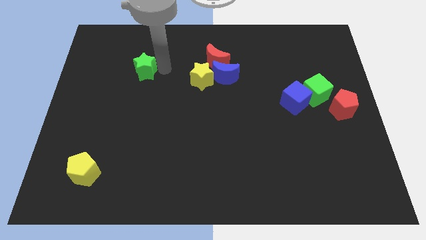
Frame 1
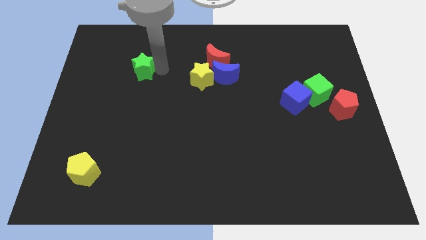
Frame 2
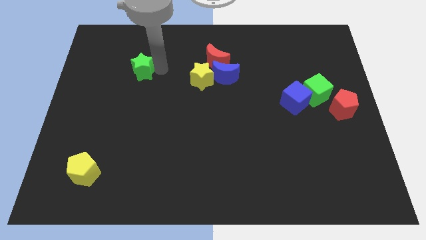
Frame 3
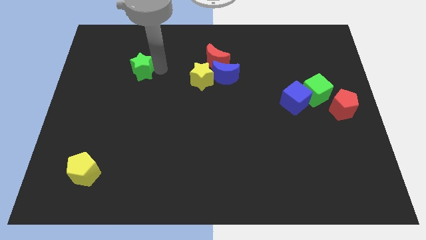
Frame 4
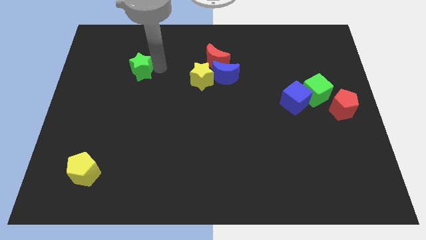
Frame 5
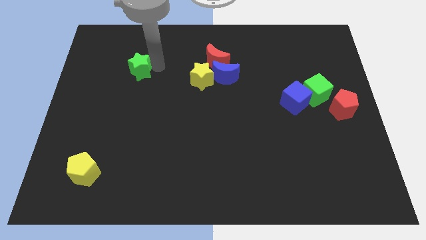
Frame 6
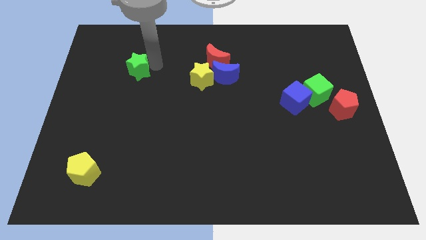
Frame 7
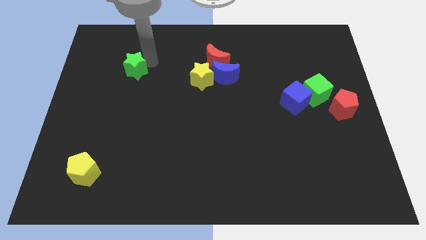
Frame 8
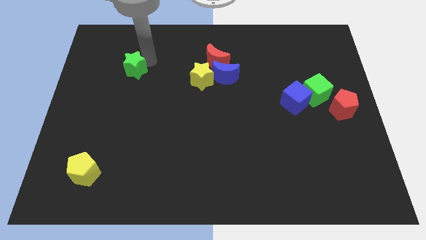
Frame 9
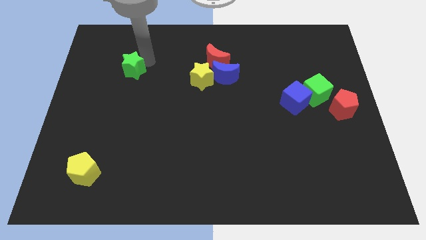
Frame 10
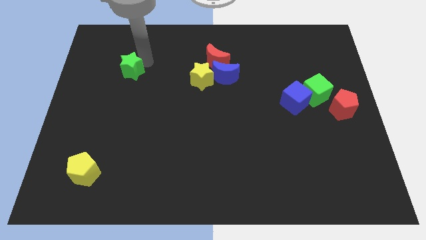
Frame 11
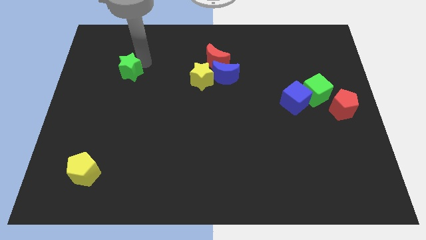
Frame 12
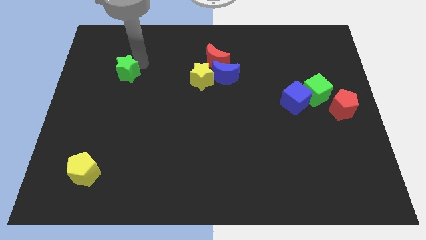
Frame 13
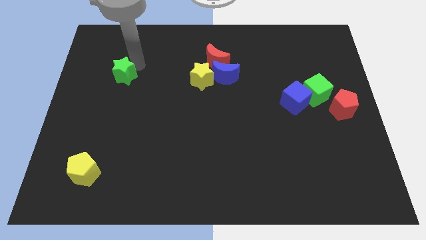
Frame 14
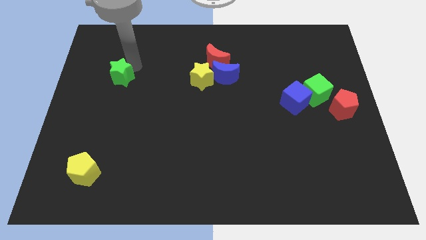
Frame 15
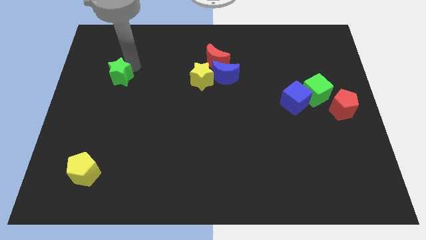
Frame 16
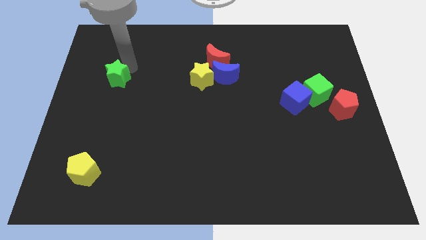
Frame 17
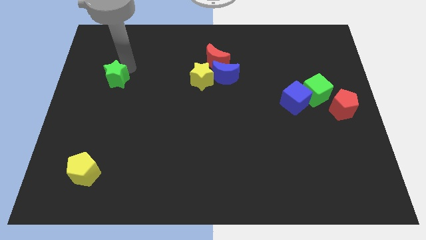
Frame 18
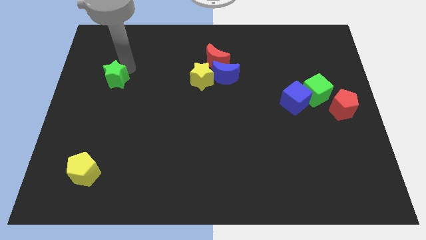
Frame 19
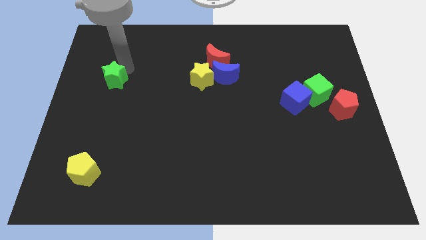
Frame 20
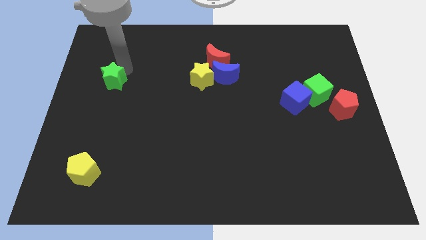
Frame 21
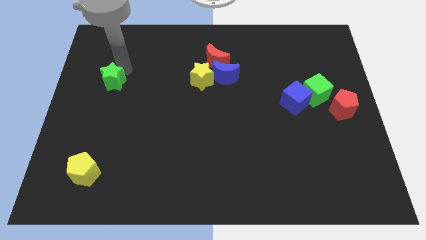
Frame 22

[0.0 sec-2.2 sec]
push the green star to the bottom of the board

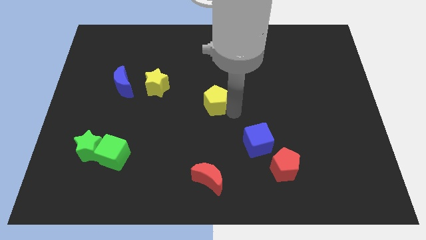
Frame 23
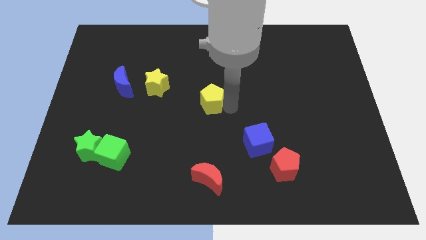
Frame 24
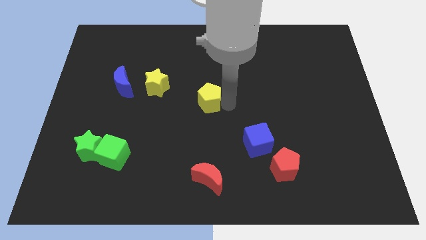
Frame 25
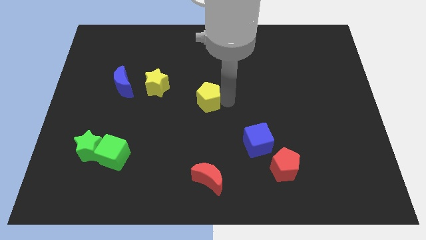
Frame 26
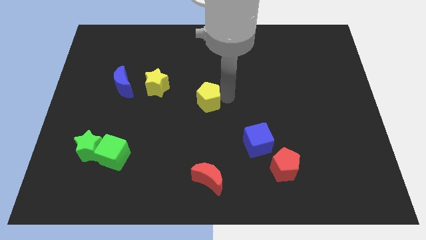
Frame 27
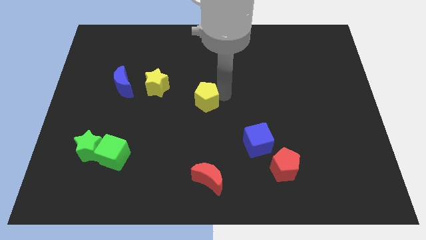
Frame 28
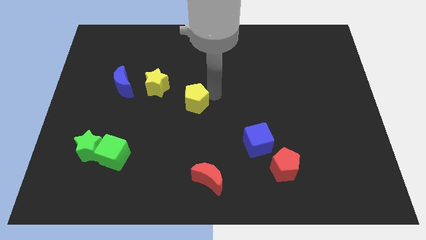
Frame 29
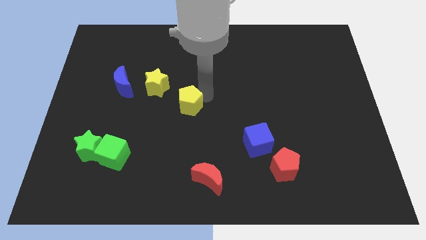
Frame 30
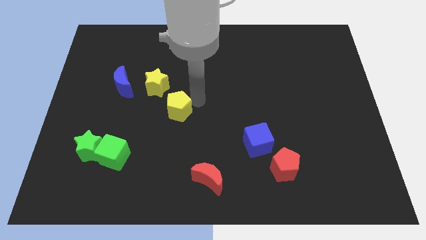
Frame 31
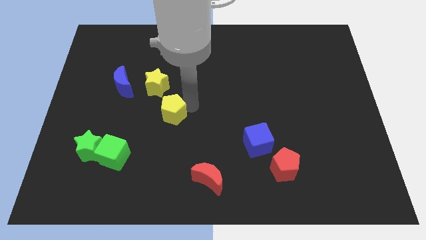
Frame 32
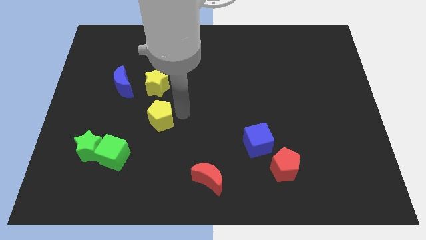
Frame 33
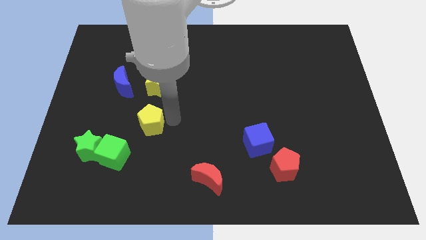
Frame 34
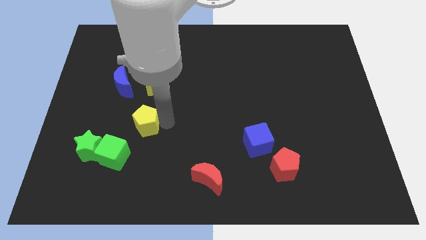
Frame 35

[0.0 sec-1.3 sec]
place the yellow pentagon below the yellow star

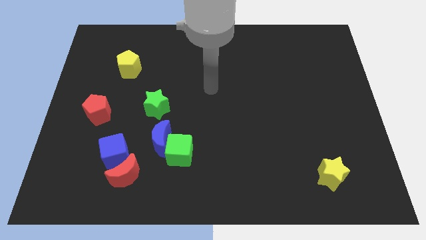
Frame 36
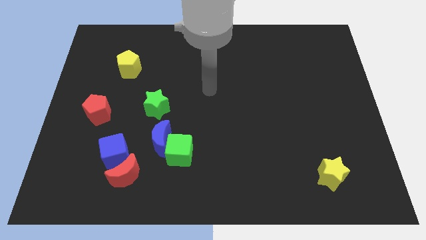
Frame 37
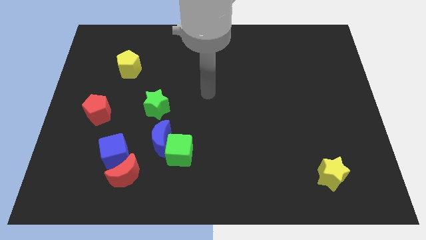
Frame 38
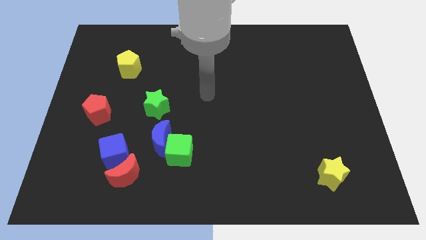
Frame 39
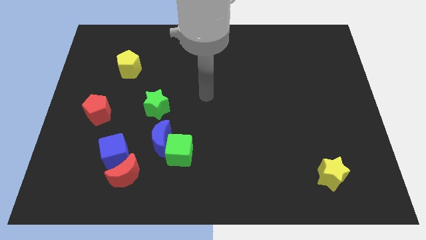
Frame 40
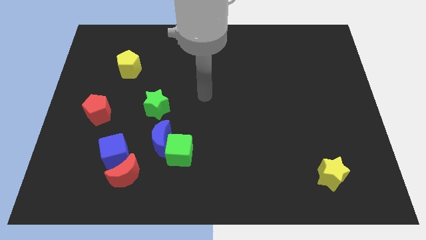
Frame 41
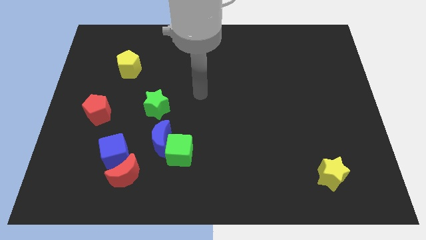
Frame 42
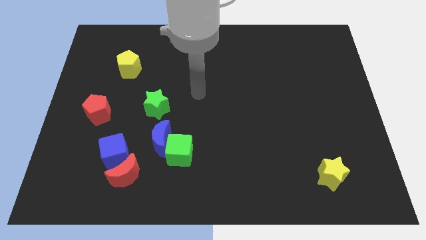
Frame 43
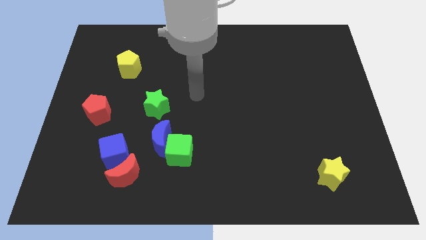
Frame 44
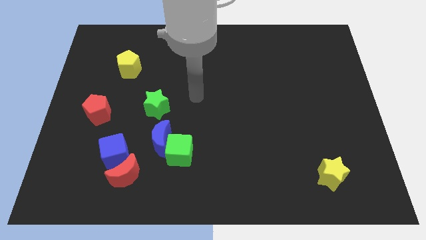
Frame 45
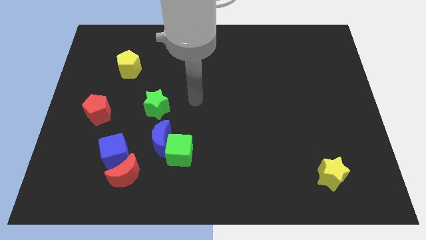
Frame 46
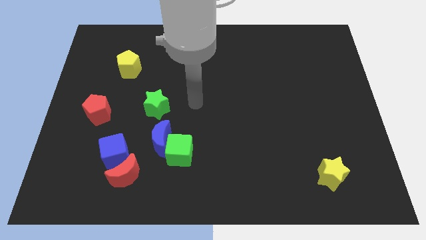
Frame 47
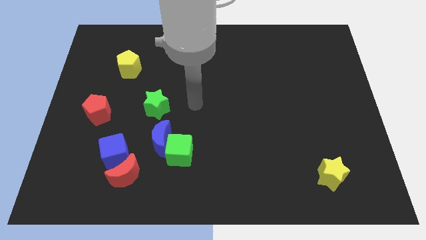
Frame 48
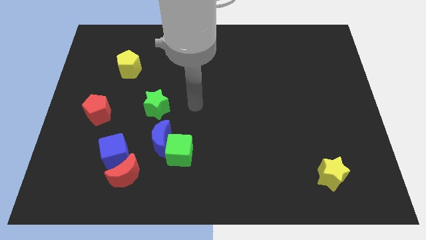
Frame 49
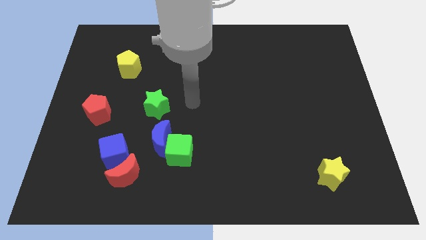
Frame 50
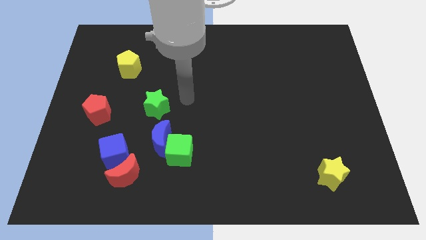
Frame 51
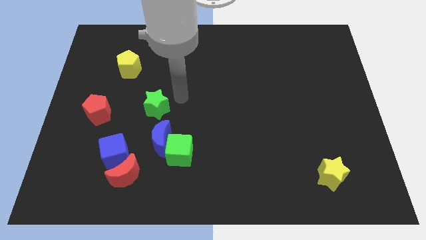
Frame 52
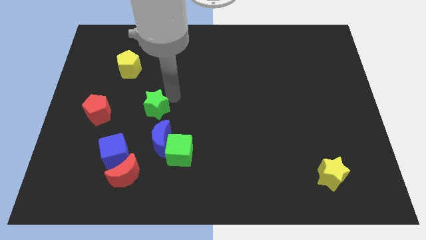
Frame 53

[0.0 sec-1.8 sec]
place the arm diagonally to the right of the green star

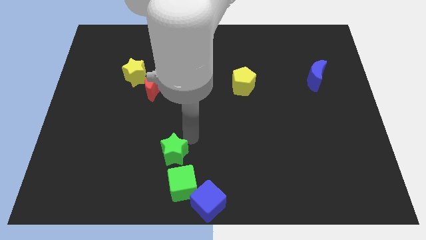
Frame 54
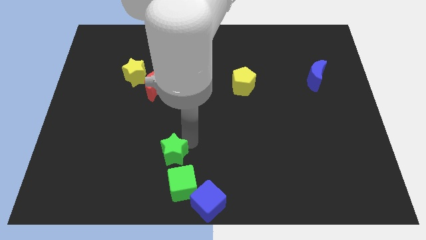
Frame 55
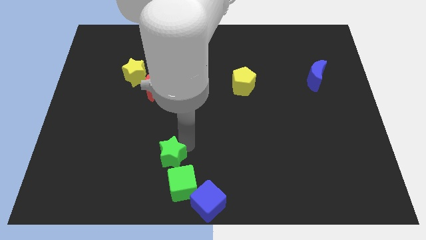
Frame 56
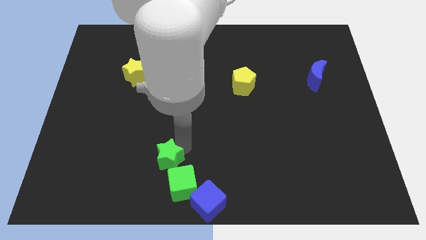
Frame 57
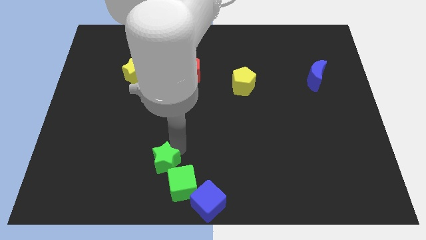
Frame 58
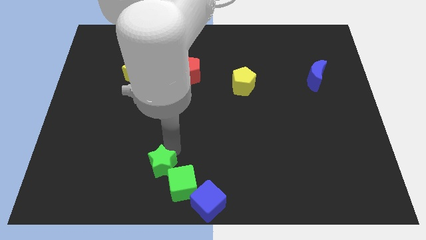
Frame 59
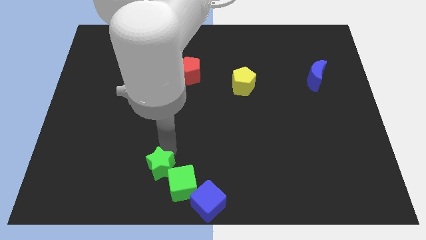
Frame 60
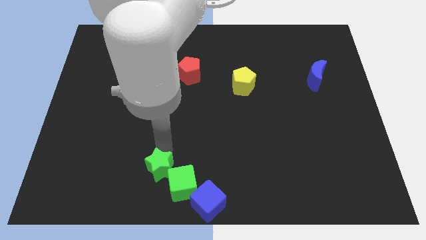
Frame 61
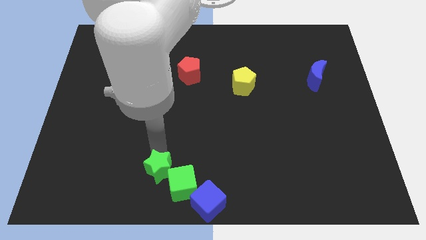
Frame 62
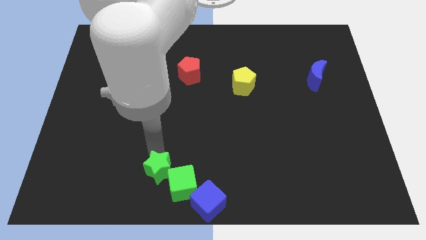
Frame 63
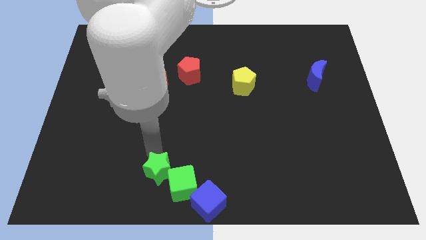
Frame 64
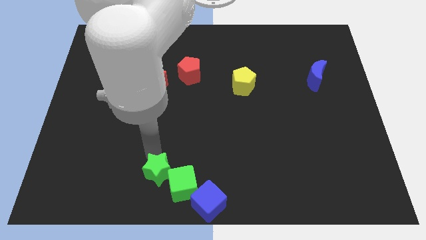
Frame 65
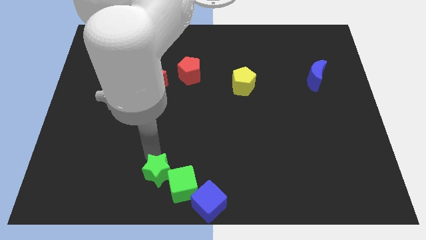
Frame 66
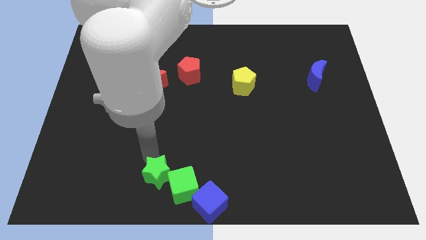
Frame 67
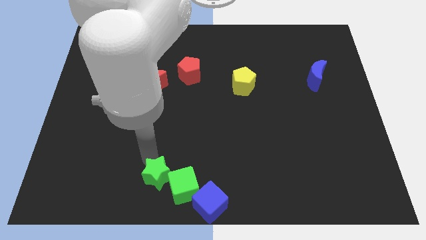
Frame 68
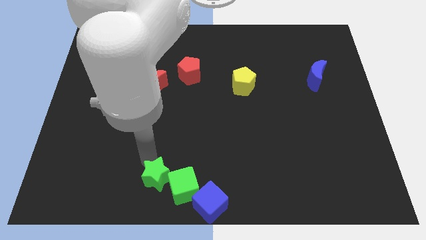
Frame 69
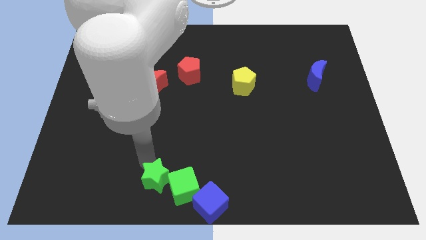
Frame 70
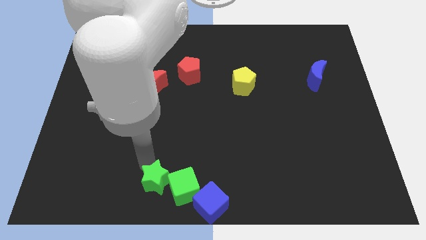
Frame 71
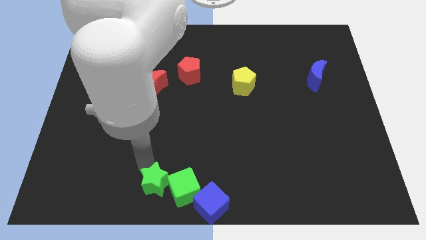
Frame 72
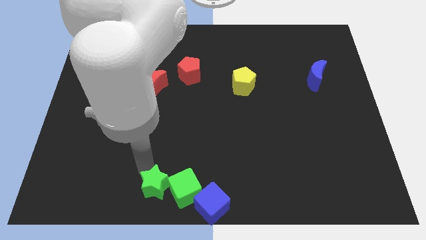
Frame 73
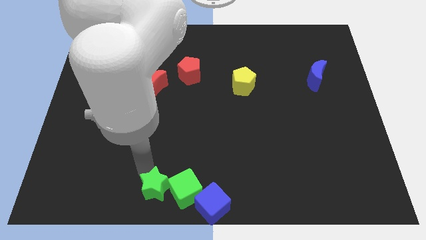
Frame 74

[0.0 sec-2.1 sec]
push the green star left to the green cube

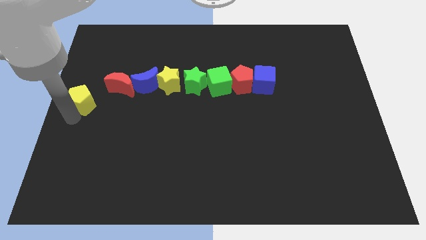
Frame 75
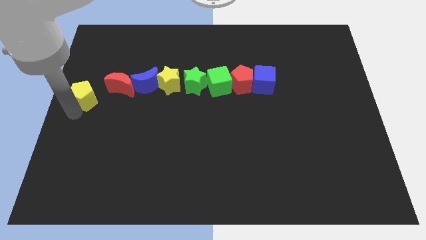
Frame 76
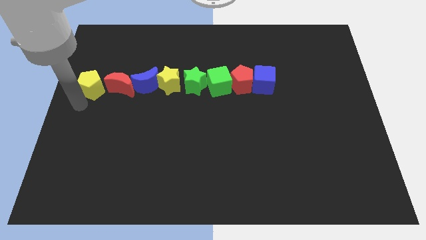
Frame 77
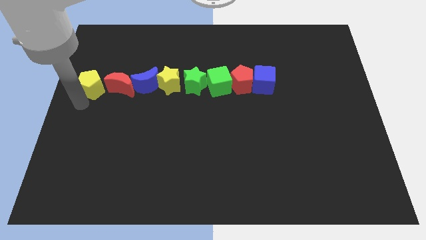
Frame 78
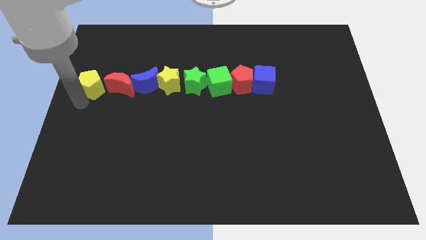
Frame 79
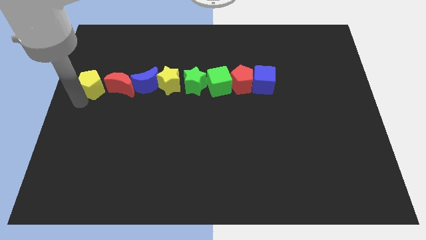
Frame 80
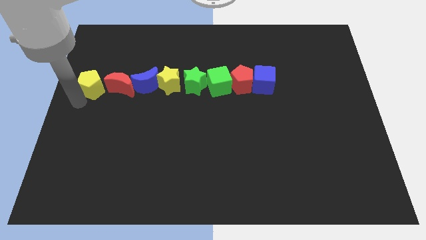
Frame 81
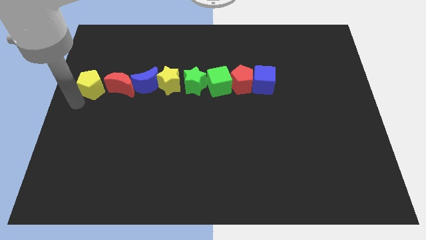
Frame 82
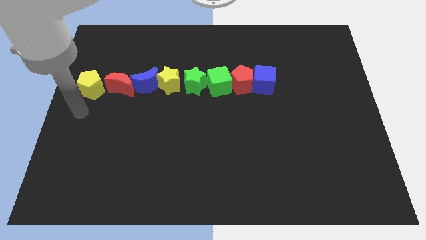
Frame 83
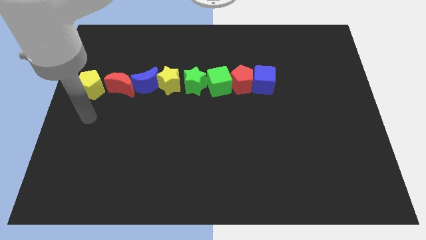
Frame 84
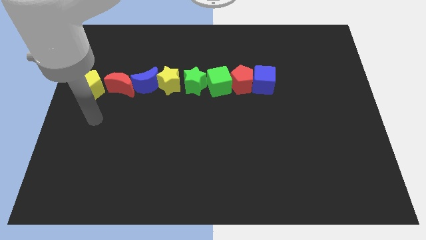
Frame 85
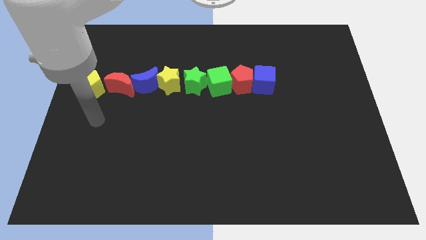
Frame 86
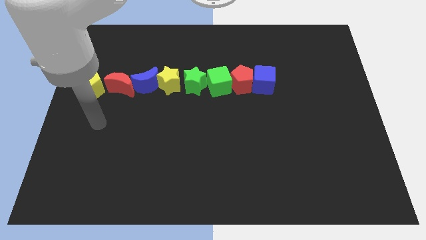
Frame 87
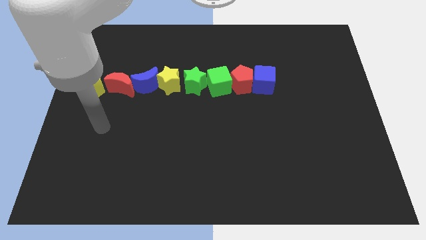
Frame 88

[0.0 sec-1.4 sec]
place yellow pentagon left of red crescent
